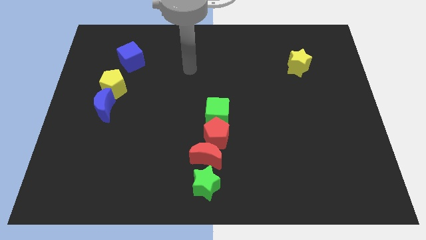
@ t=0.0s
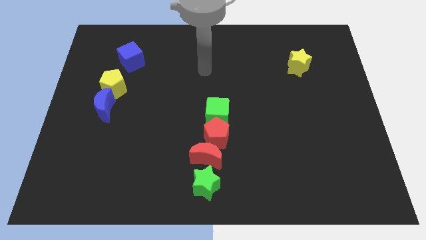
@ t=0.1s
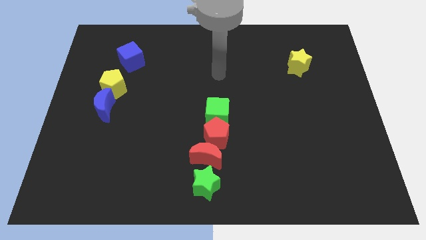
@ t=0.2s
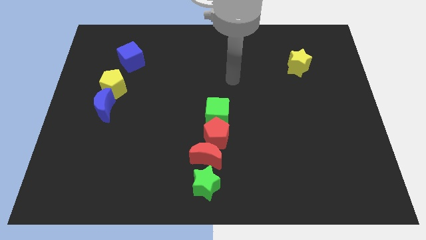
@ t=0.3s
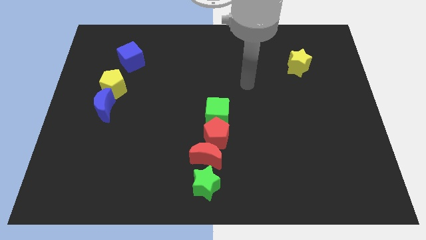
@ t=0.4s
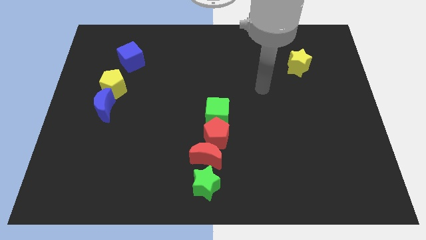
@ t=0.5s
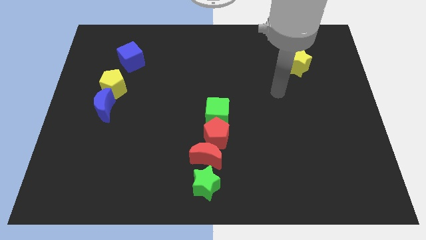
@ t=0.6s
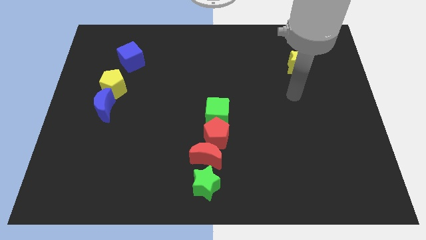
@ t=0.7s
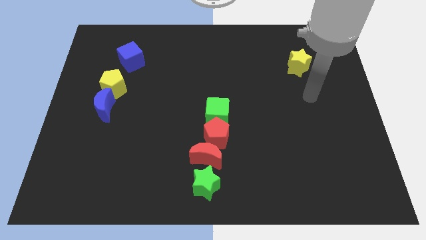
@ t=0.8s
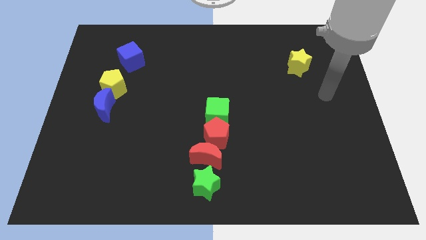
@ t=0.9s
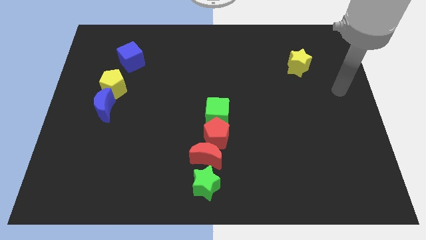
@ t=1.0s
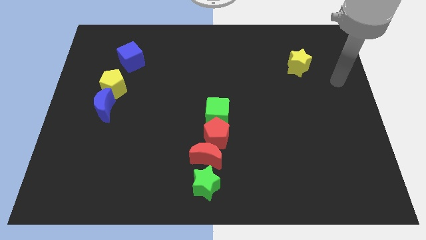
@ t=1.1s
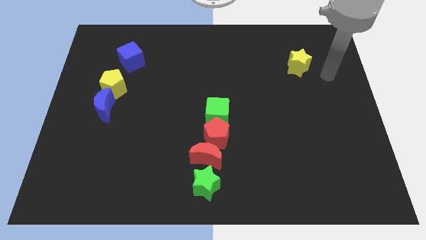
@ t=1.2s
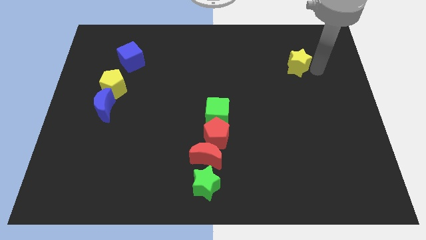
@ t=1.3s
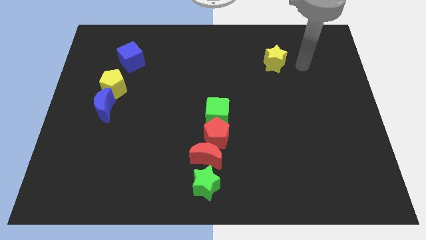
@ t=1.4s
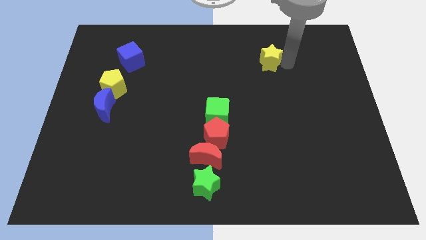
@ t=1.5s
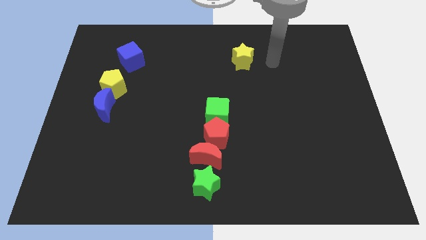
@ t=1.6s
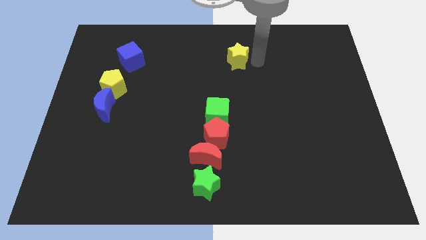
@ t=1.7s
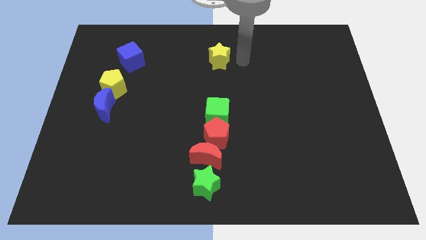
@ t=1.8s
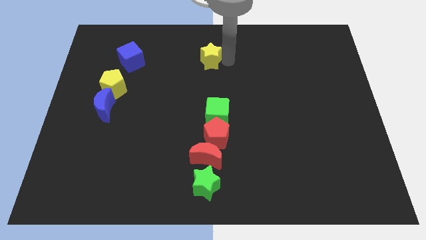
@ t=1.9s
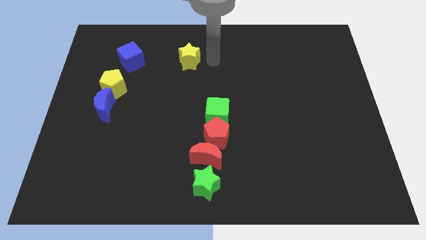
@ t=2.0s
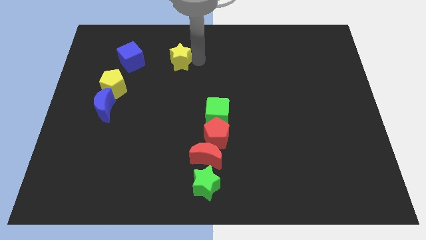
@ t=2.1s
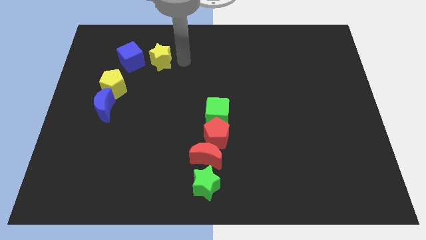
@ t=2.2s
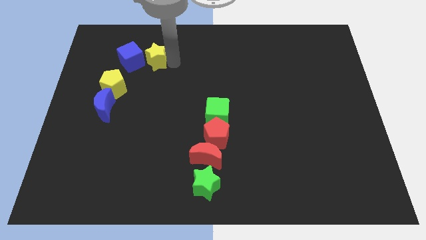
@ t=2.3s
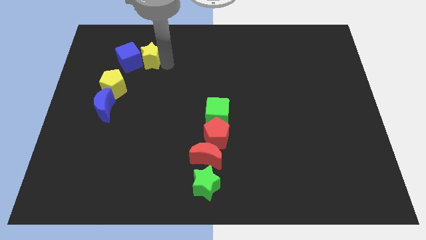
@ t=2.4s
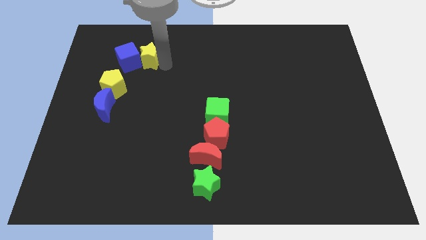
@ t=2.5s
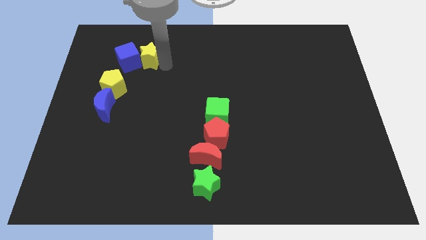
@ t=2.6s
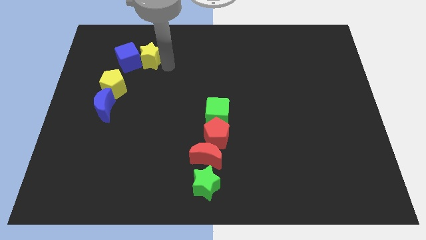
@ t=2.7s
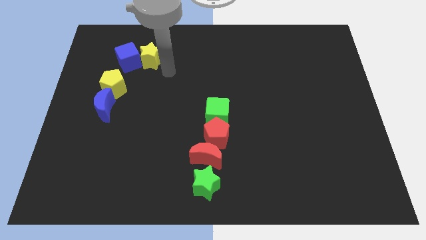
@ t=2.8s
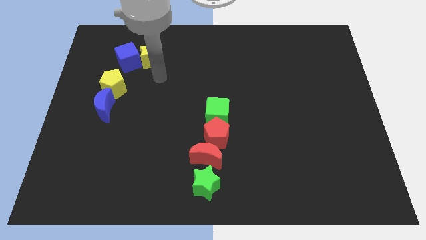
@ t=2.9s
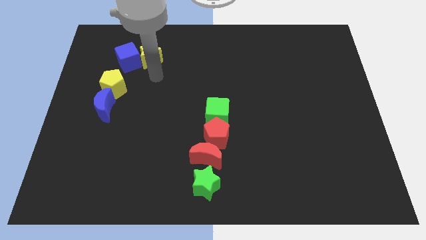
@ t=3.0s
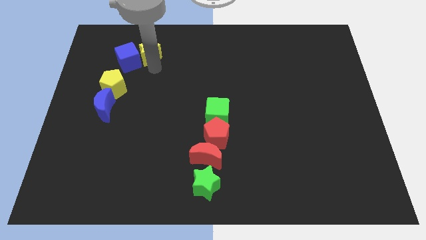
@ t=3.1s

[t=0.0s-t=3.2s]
push the yellow star to the right of the blue cube

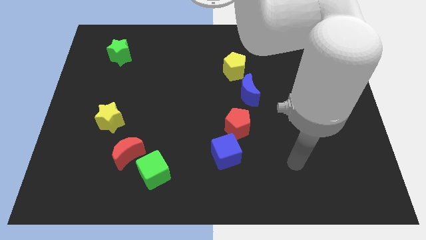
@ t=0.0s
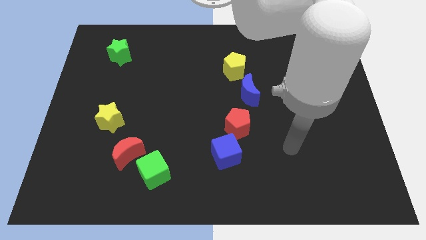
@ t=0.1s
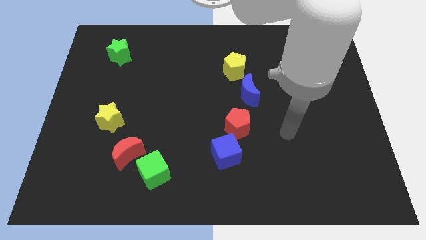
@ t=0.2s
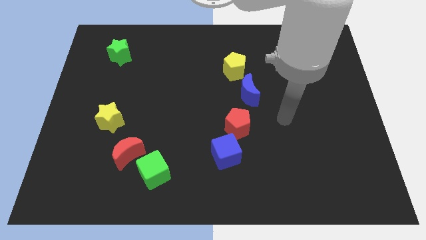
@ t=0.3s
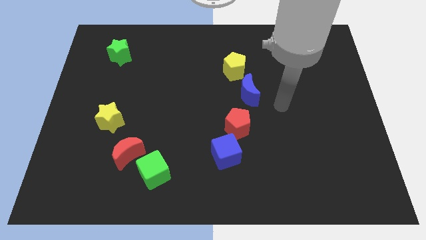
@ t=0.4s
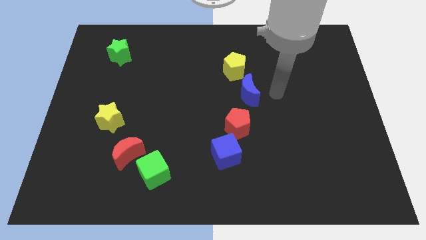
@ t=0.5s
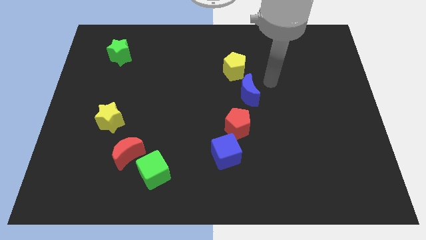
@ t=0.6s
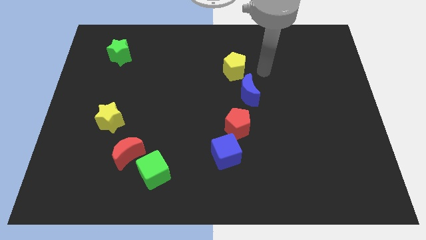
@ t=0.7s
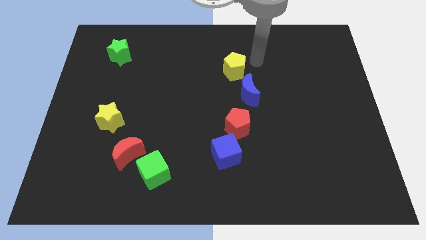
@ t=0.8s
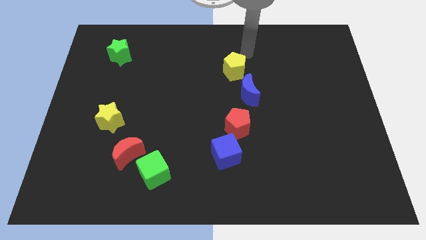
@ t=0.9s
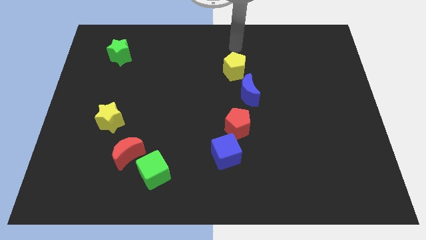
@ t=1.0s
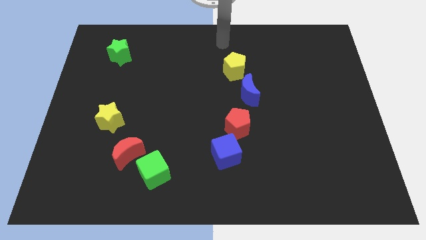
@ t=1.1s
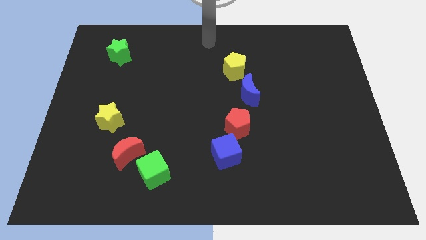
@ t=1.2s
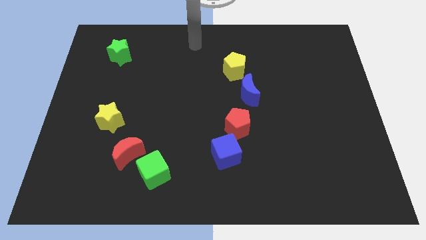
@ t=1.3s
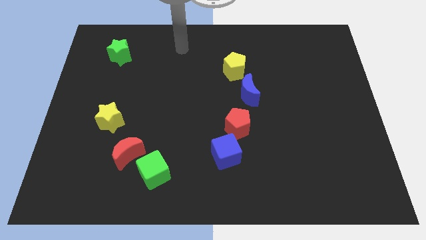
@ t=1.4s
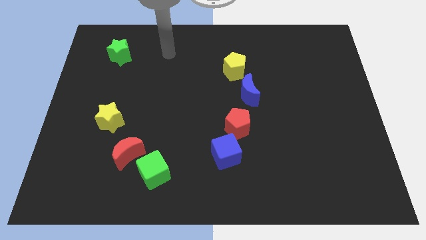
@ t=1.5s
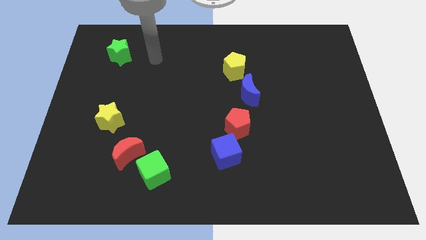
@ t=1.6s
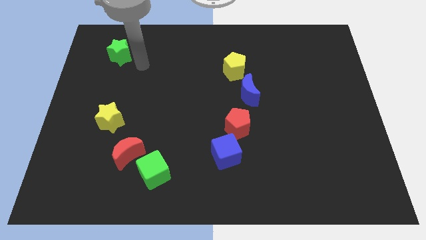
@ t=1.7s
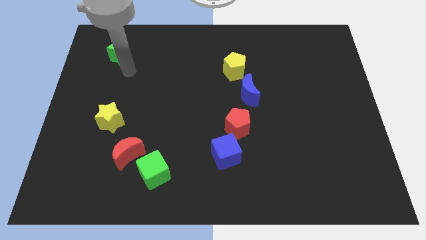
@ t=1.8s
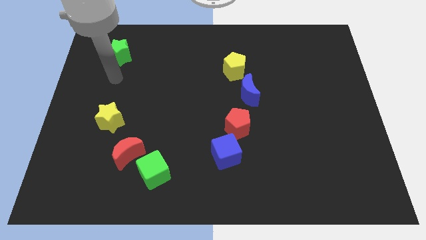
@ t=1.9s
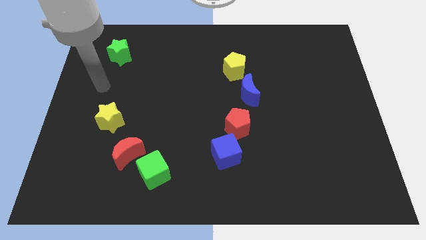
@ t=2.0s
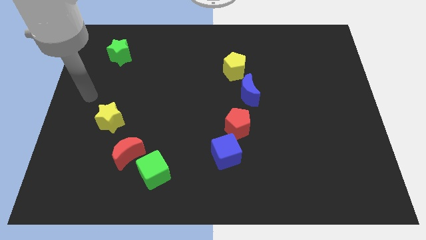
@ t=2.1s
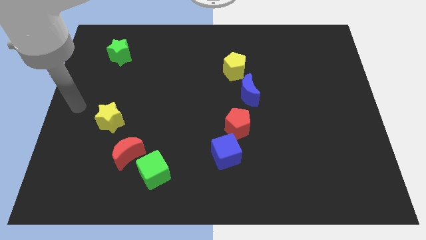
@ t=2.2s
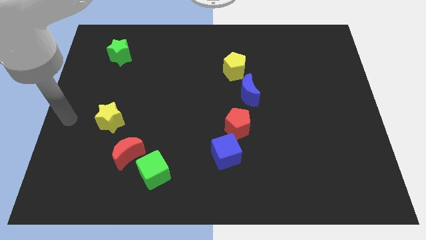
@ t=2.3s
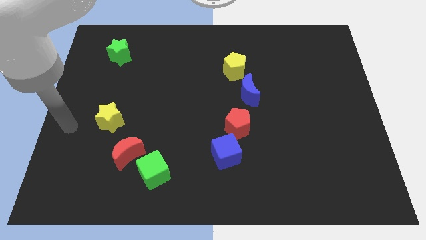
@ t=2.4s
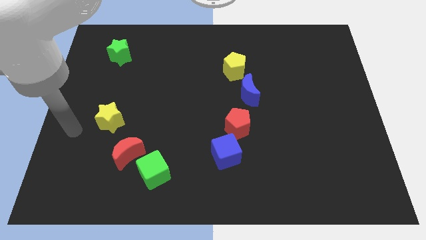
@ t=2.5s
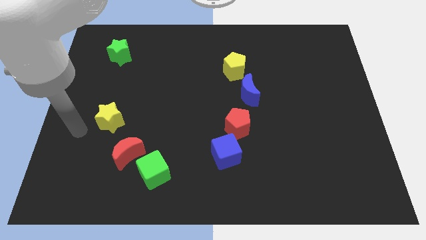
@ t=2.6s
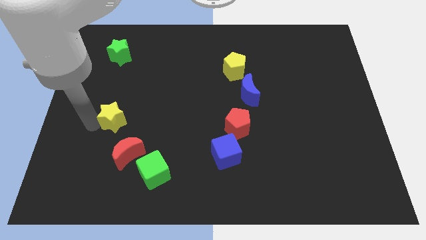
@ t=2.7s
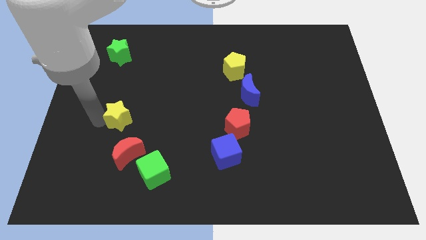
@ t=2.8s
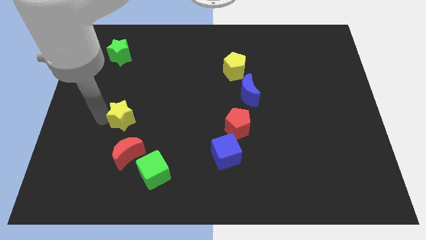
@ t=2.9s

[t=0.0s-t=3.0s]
move your arm and slightly push the yellow star above red moon

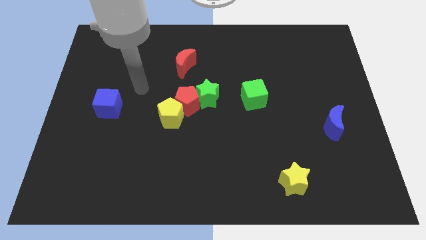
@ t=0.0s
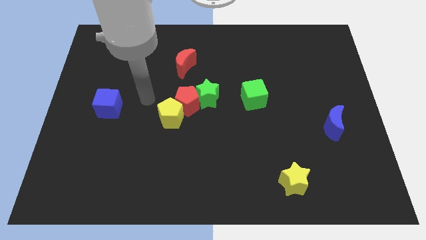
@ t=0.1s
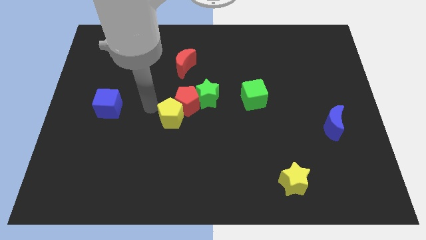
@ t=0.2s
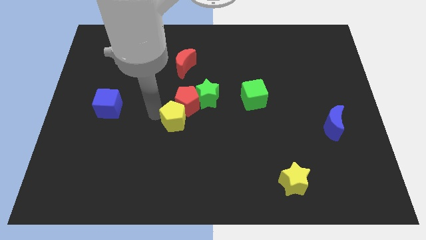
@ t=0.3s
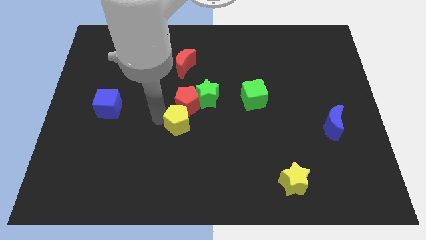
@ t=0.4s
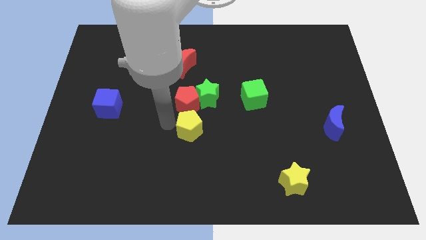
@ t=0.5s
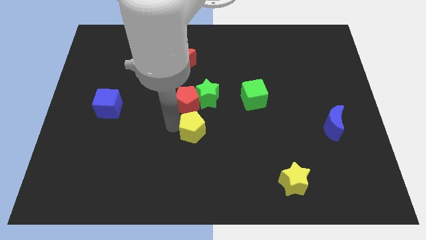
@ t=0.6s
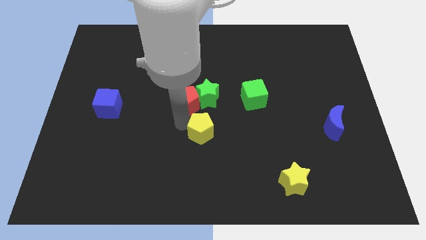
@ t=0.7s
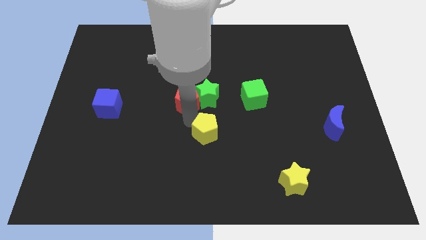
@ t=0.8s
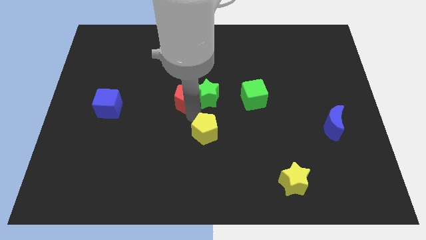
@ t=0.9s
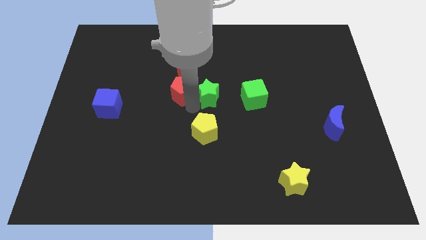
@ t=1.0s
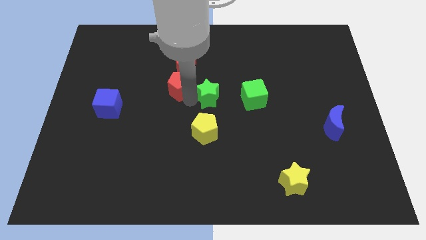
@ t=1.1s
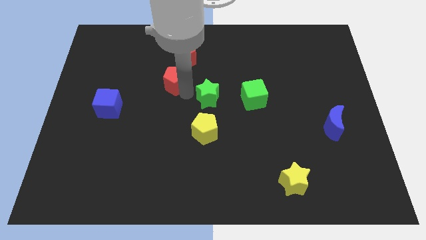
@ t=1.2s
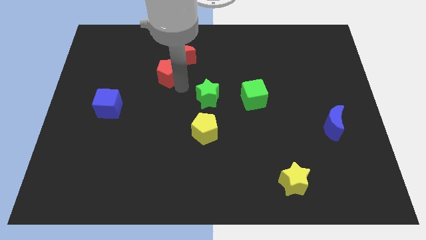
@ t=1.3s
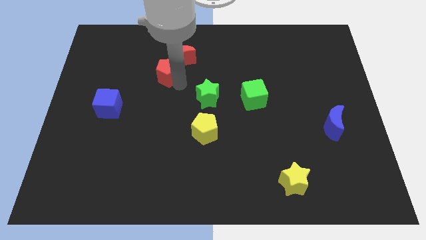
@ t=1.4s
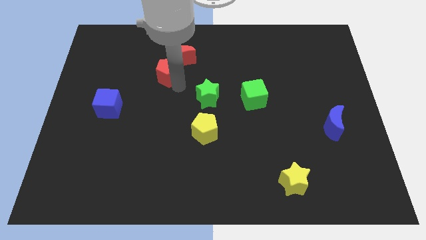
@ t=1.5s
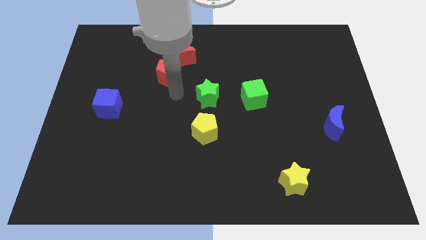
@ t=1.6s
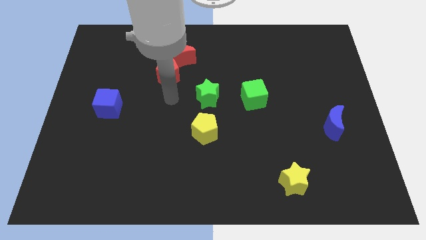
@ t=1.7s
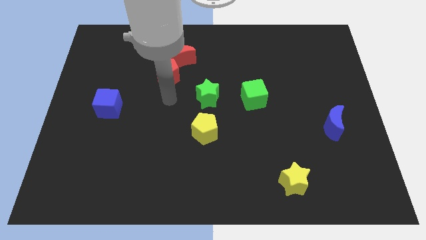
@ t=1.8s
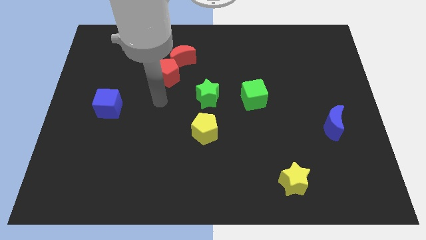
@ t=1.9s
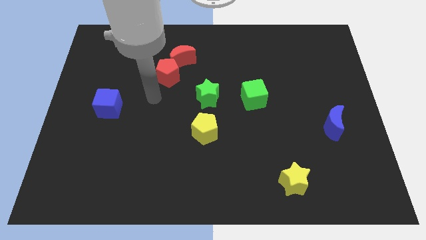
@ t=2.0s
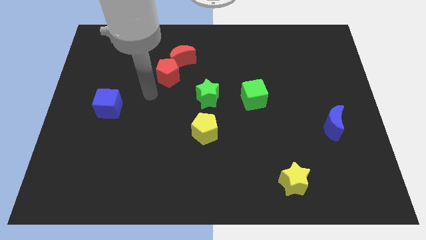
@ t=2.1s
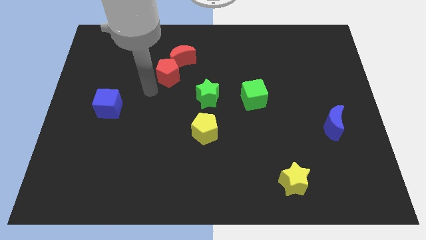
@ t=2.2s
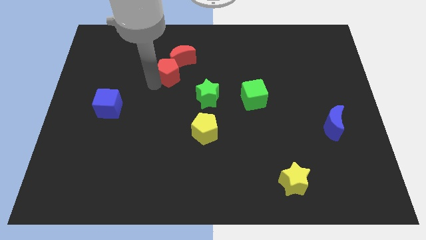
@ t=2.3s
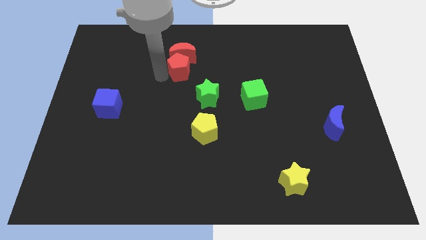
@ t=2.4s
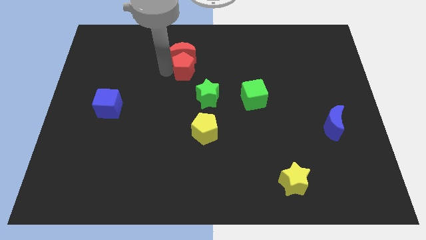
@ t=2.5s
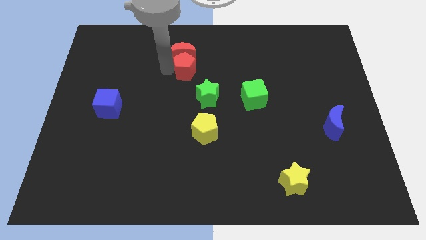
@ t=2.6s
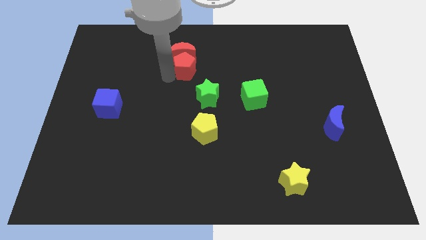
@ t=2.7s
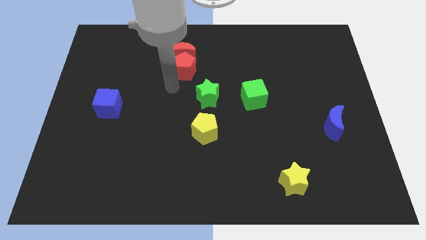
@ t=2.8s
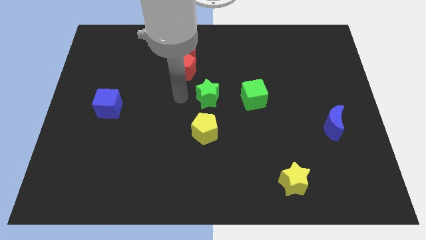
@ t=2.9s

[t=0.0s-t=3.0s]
push the red pentagon into red crescent
